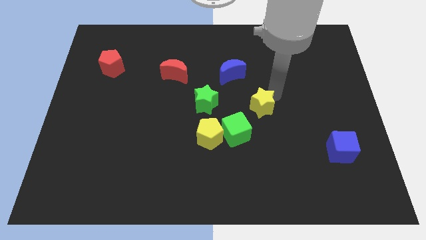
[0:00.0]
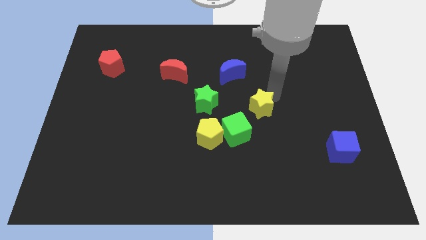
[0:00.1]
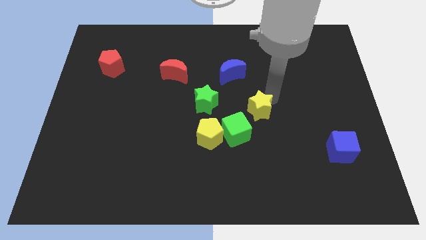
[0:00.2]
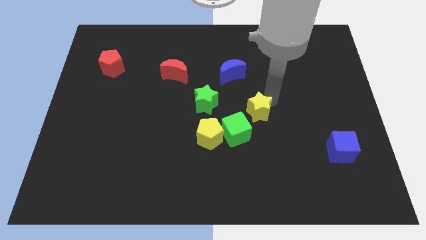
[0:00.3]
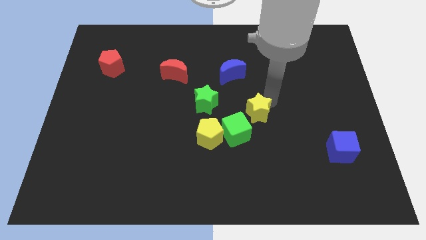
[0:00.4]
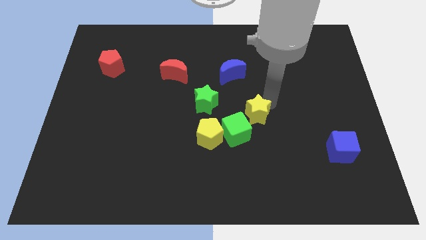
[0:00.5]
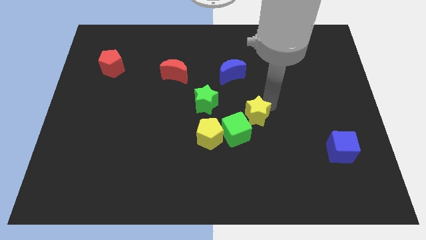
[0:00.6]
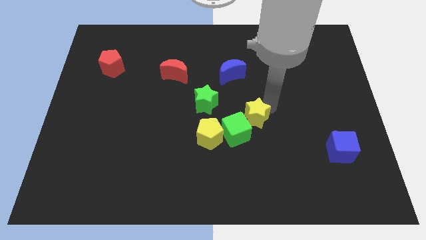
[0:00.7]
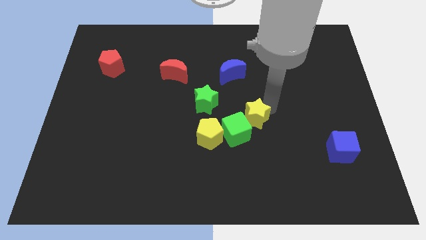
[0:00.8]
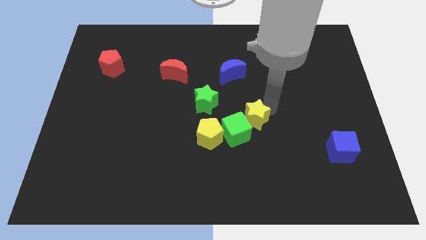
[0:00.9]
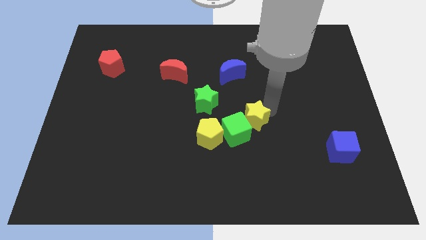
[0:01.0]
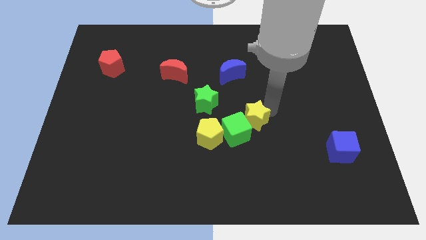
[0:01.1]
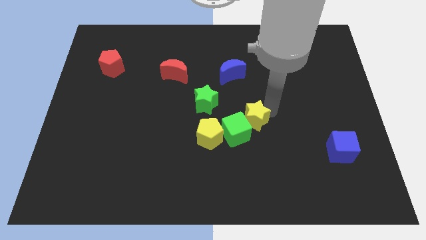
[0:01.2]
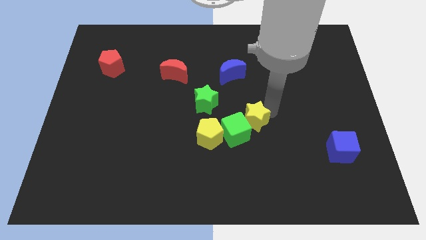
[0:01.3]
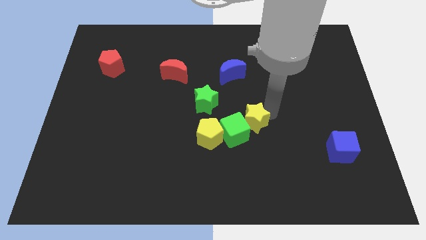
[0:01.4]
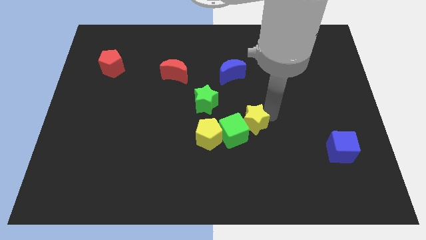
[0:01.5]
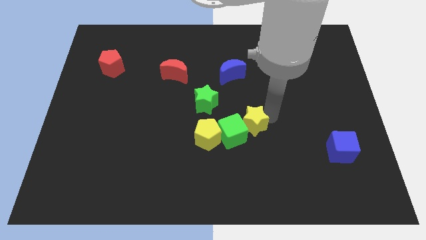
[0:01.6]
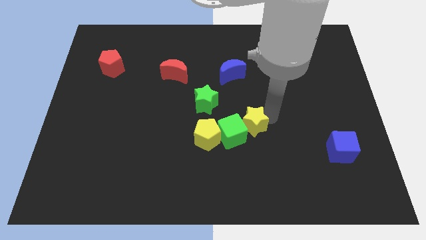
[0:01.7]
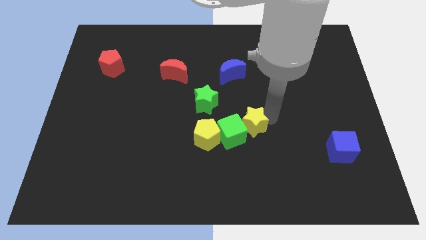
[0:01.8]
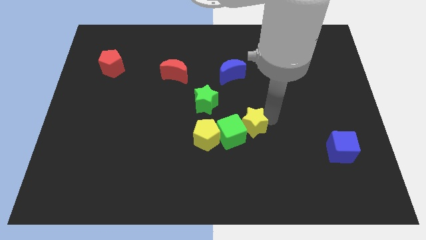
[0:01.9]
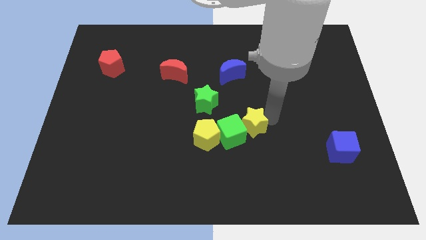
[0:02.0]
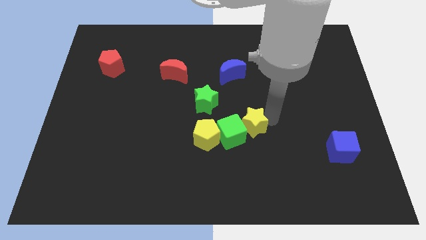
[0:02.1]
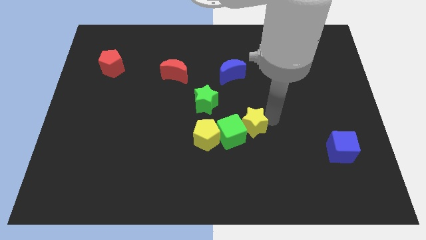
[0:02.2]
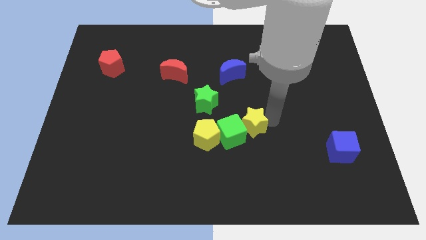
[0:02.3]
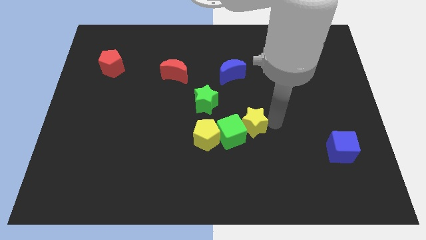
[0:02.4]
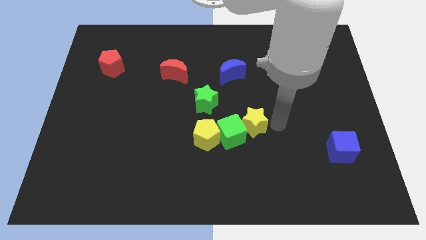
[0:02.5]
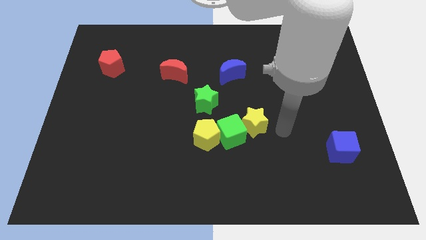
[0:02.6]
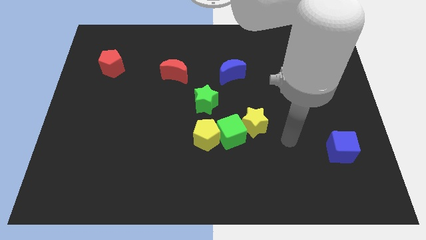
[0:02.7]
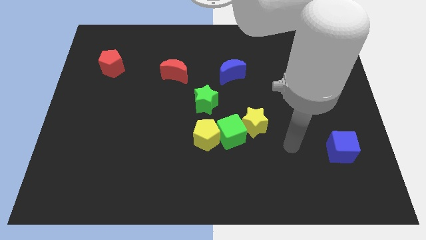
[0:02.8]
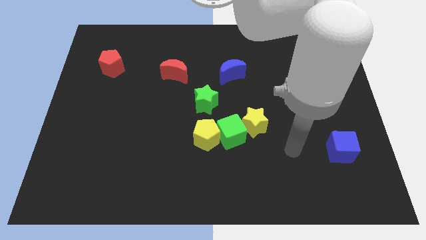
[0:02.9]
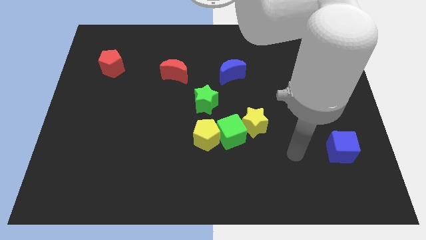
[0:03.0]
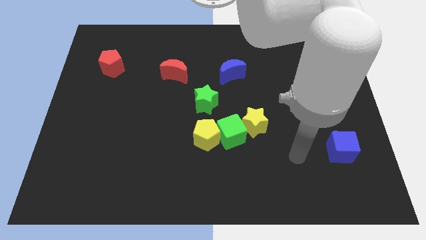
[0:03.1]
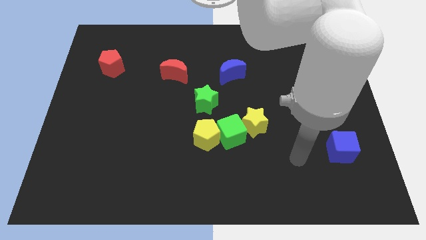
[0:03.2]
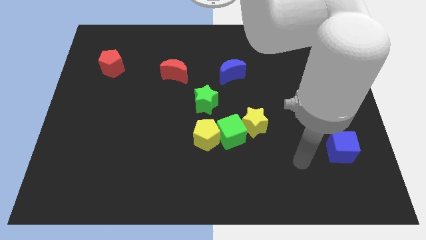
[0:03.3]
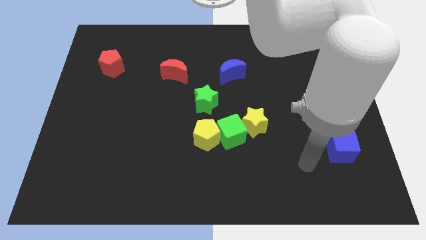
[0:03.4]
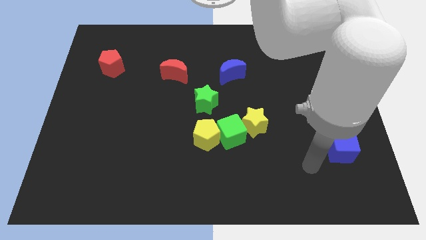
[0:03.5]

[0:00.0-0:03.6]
push the yellow star into the green cube

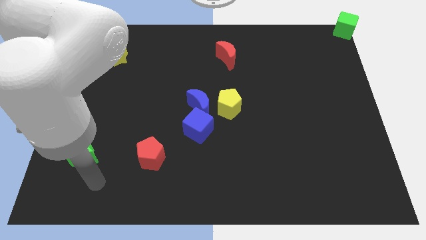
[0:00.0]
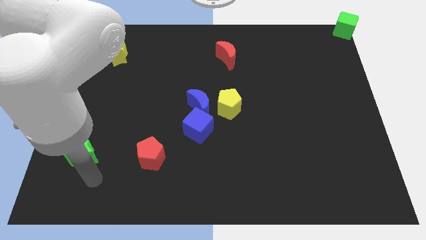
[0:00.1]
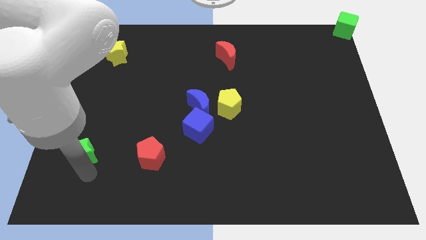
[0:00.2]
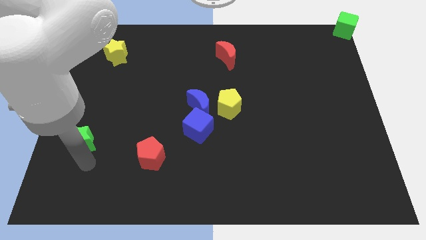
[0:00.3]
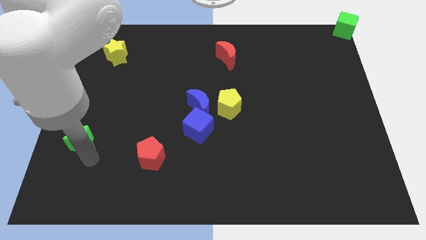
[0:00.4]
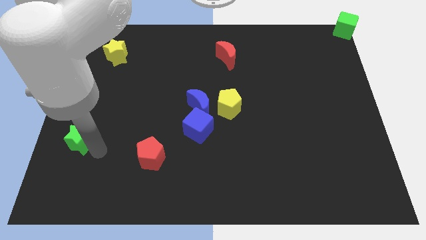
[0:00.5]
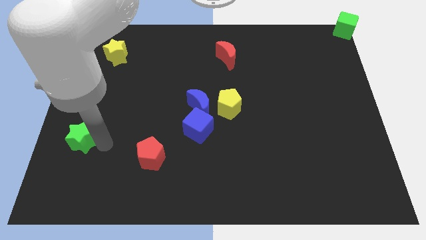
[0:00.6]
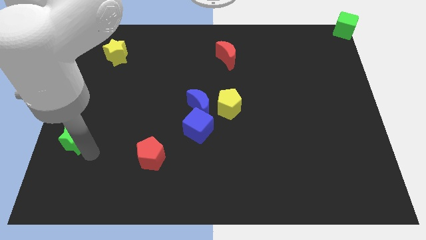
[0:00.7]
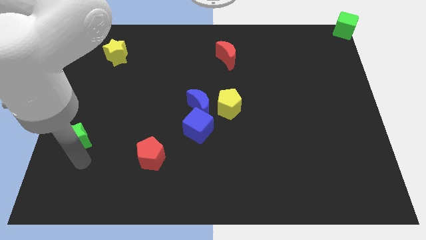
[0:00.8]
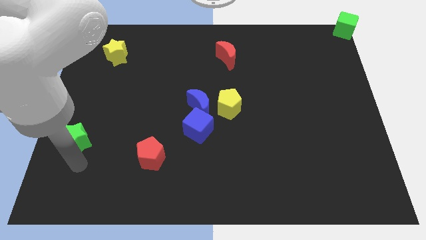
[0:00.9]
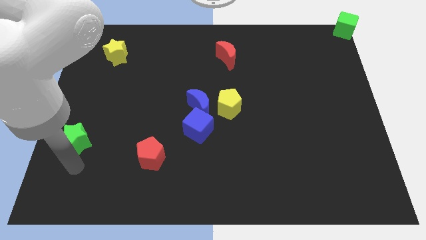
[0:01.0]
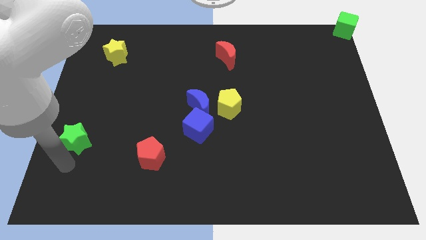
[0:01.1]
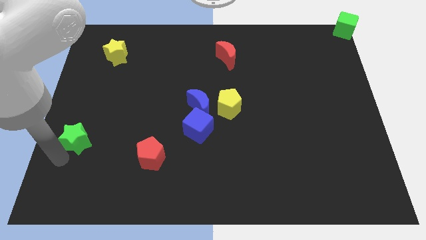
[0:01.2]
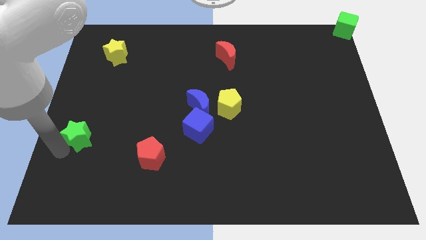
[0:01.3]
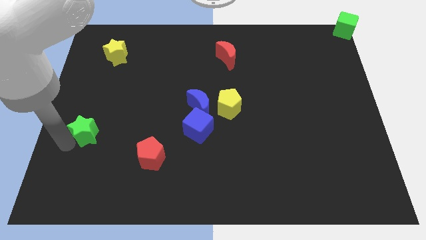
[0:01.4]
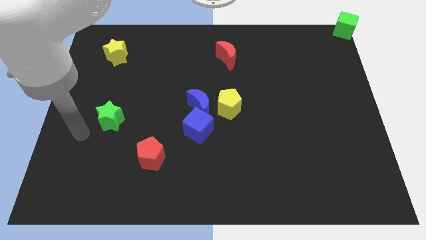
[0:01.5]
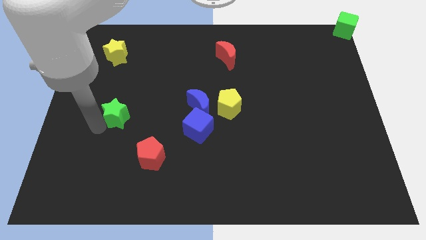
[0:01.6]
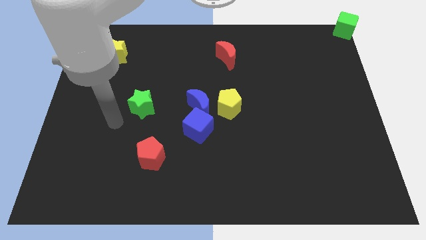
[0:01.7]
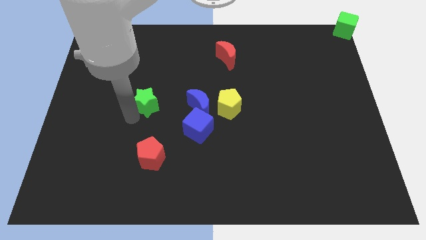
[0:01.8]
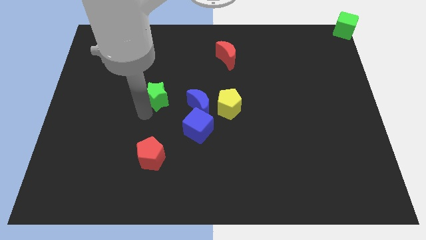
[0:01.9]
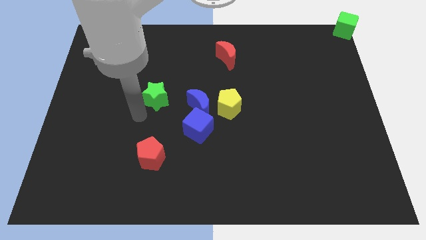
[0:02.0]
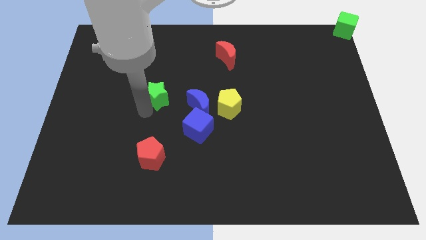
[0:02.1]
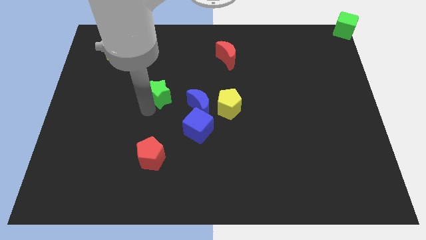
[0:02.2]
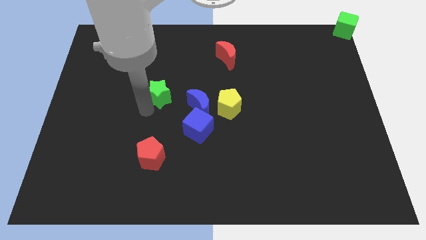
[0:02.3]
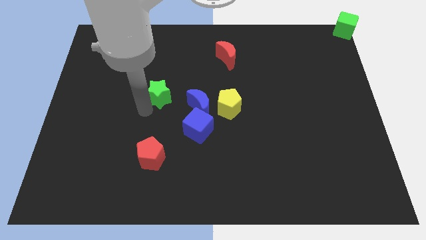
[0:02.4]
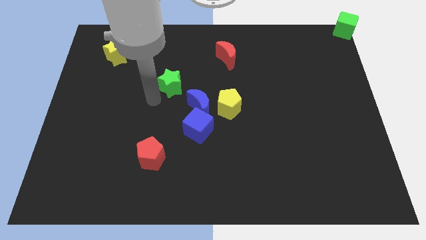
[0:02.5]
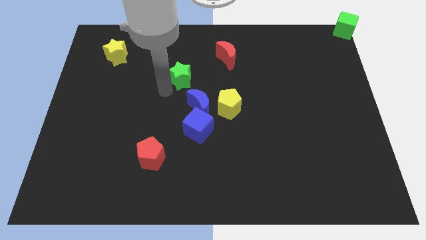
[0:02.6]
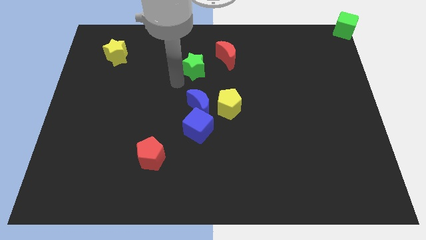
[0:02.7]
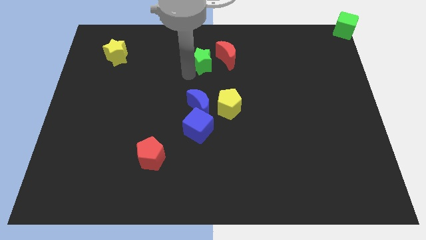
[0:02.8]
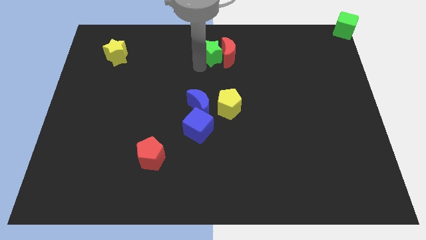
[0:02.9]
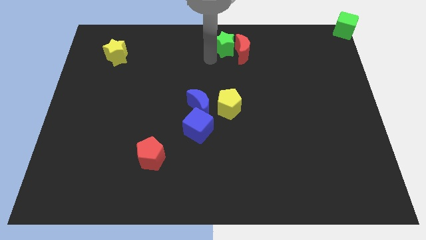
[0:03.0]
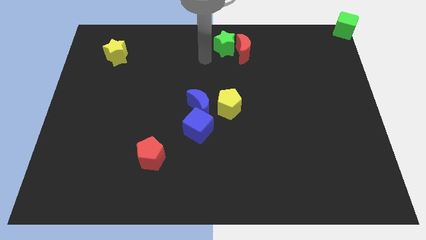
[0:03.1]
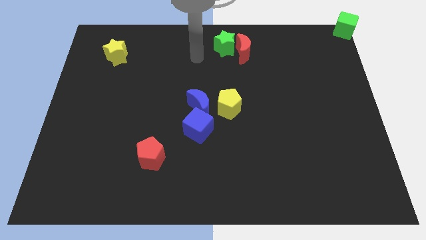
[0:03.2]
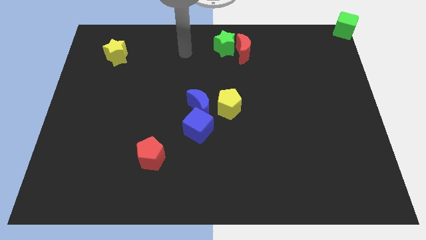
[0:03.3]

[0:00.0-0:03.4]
push green star into red crescent

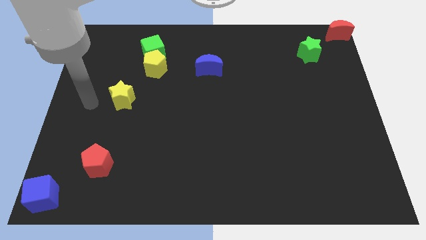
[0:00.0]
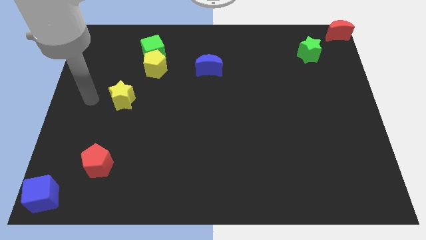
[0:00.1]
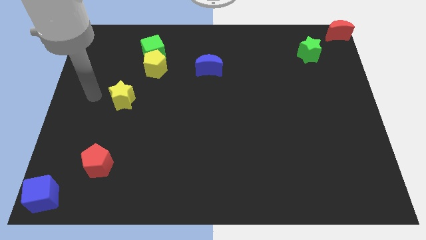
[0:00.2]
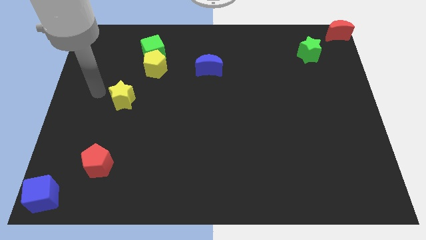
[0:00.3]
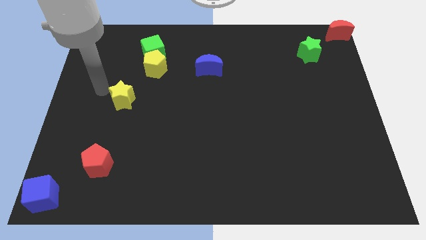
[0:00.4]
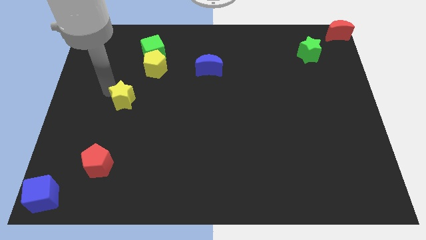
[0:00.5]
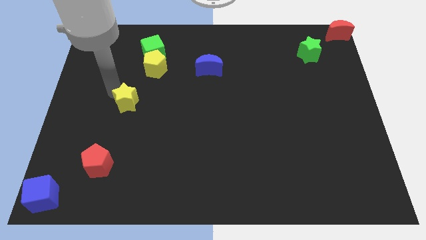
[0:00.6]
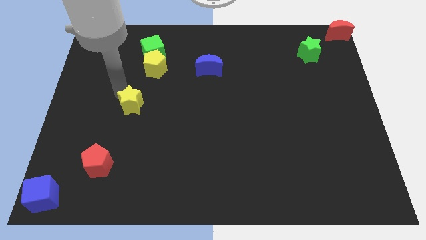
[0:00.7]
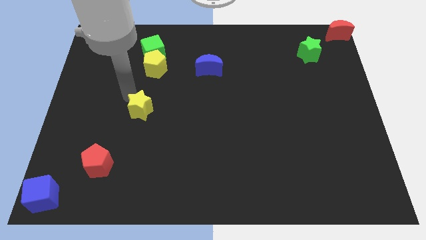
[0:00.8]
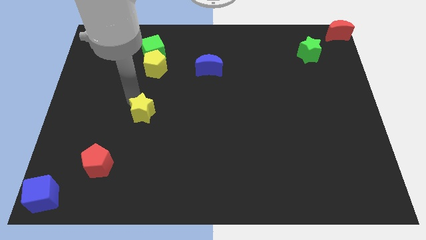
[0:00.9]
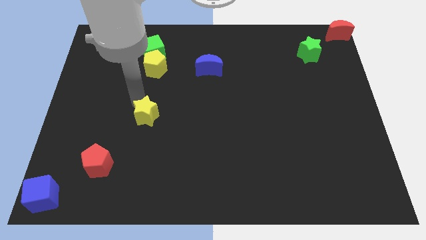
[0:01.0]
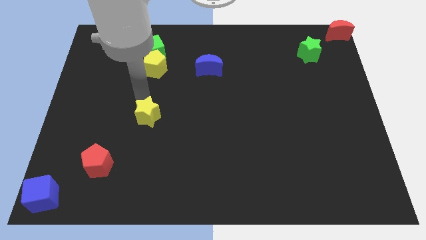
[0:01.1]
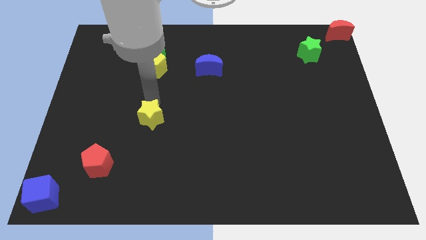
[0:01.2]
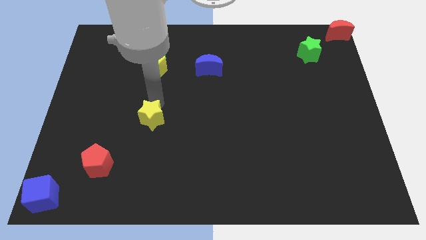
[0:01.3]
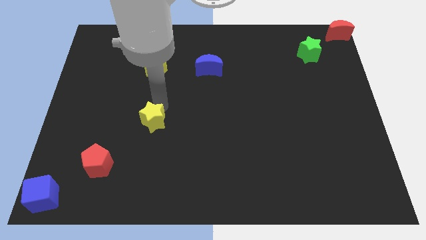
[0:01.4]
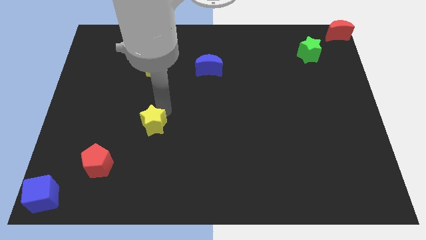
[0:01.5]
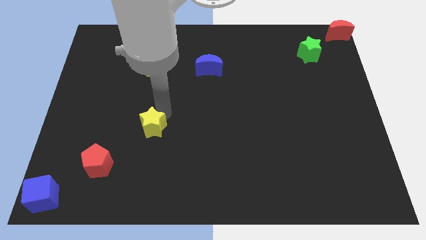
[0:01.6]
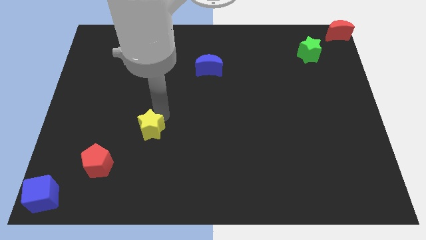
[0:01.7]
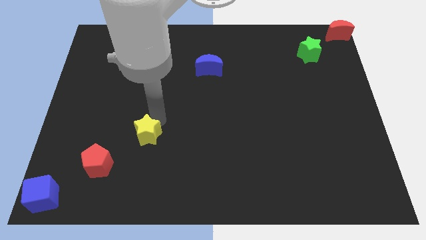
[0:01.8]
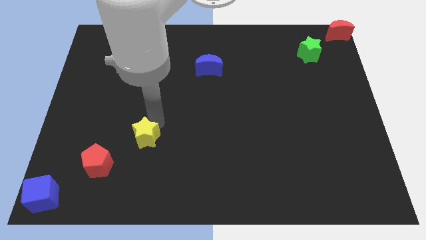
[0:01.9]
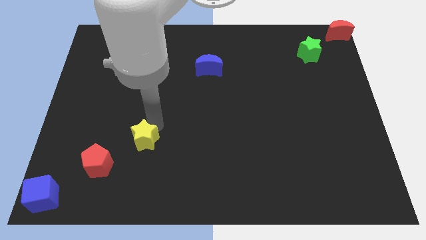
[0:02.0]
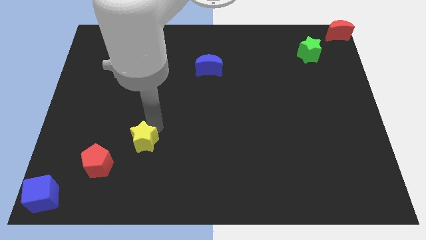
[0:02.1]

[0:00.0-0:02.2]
place the yellow star diagonally above the red pentagon
